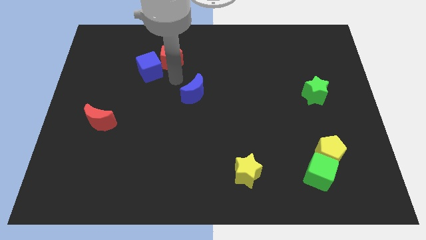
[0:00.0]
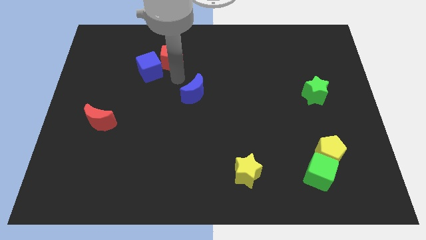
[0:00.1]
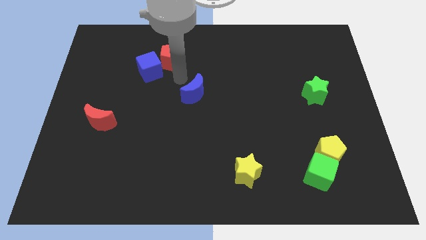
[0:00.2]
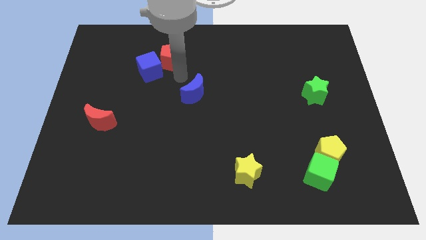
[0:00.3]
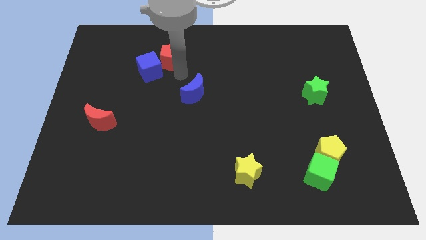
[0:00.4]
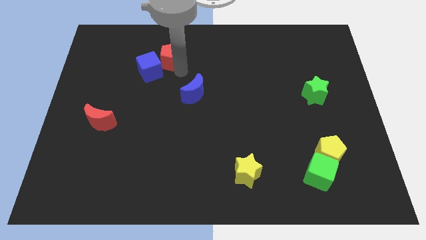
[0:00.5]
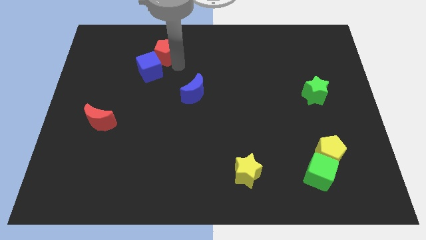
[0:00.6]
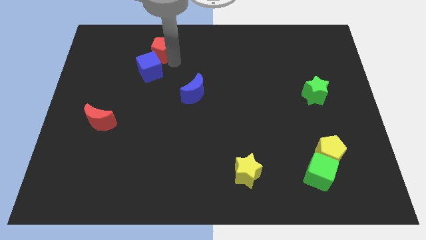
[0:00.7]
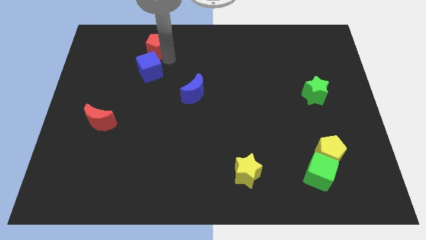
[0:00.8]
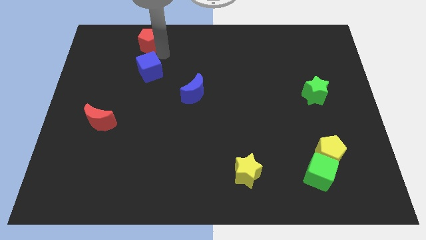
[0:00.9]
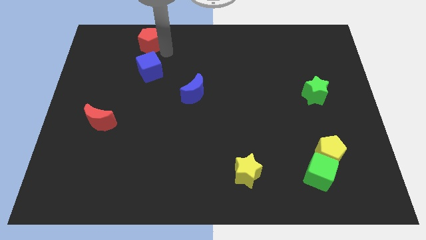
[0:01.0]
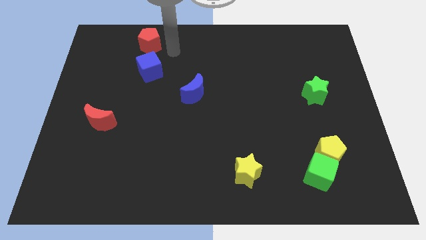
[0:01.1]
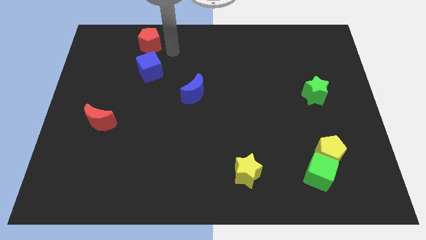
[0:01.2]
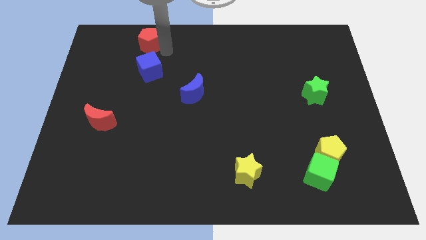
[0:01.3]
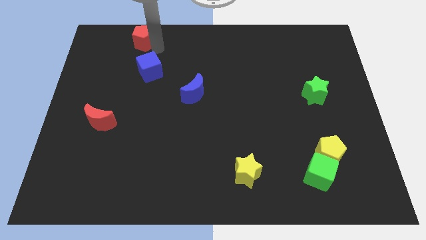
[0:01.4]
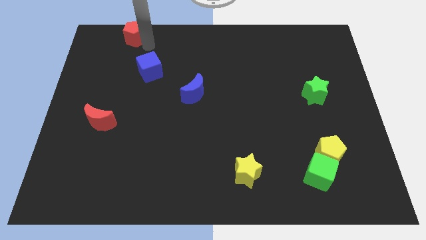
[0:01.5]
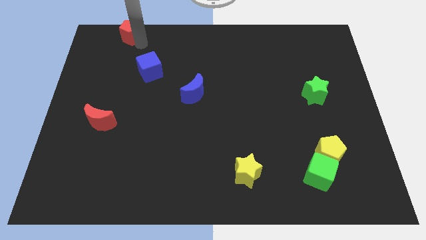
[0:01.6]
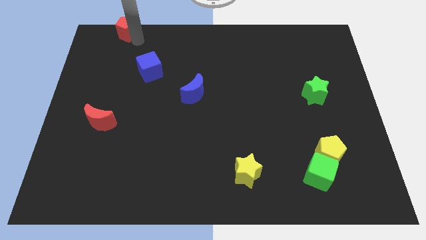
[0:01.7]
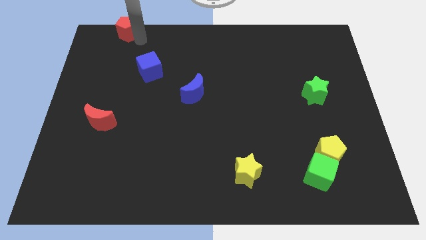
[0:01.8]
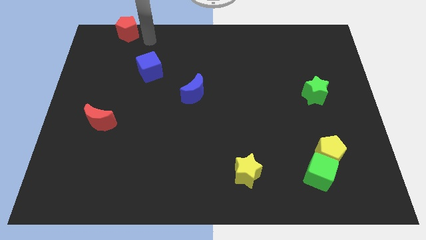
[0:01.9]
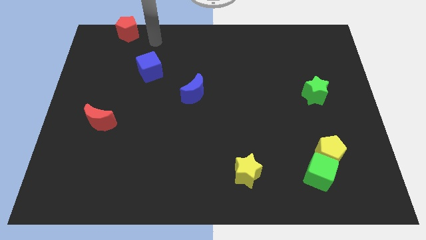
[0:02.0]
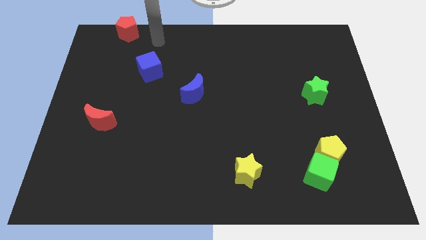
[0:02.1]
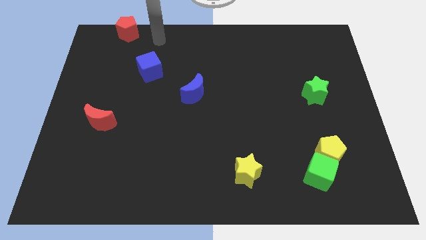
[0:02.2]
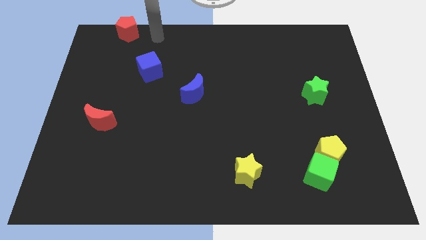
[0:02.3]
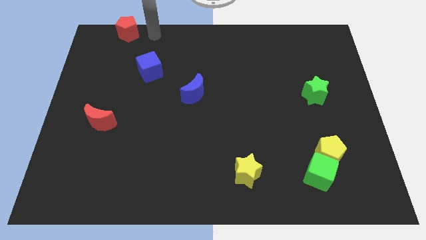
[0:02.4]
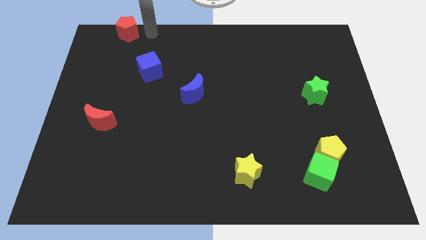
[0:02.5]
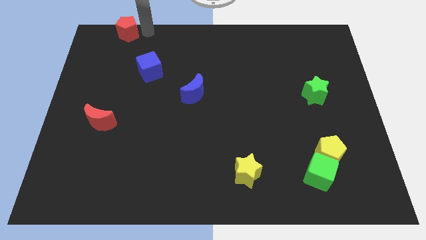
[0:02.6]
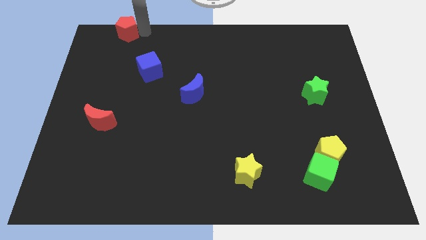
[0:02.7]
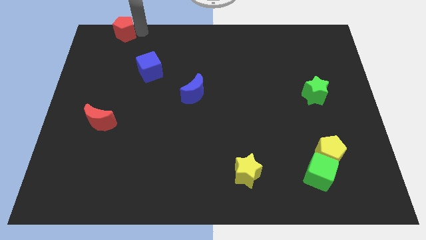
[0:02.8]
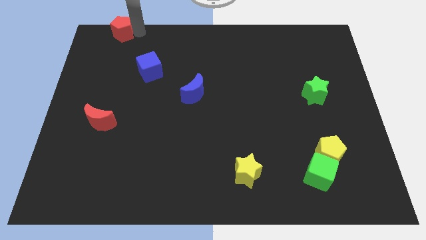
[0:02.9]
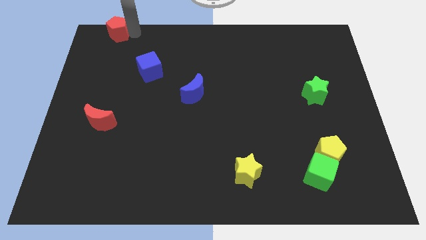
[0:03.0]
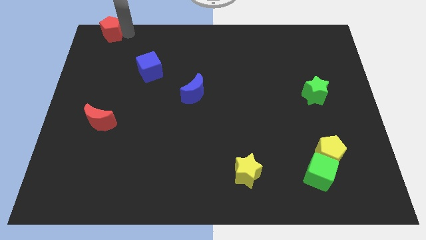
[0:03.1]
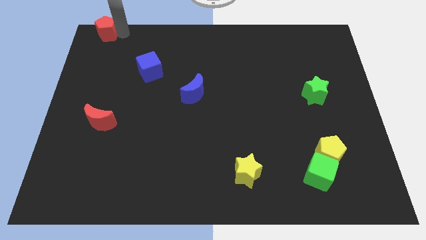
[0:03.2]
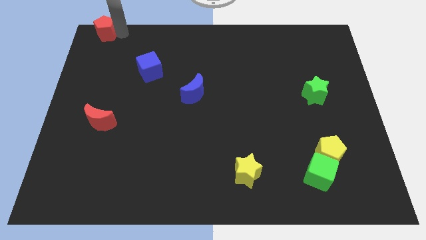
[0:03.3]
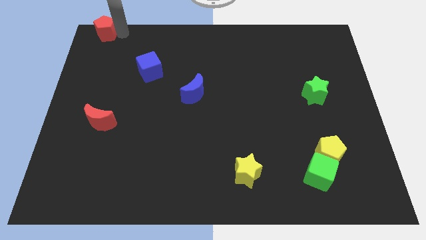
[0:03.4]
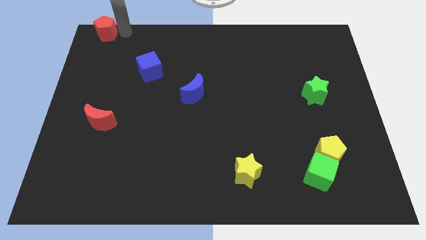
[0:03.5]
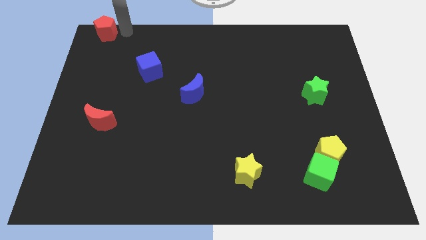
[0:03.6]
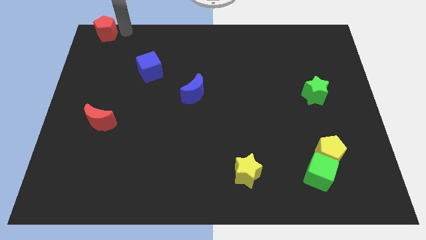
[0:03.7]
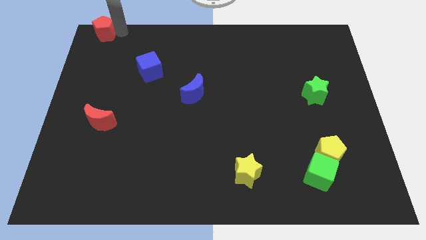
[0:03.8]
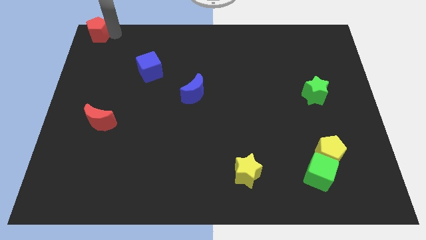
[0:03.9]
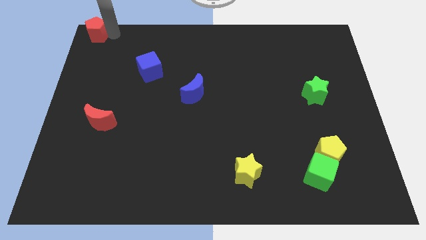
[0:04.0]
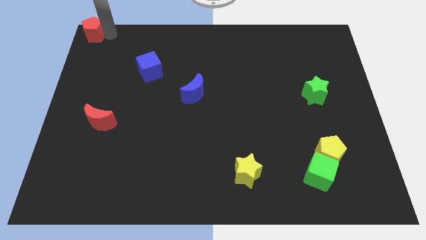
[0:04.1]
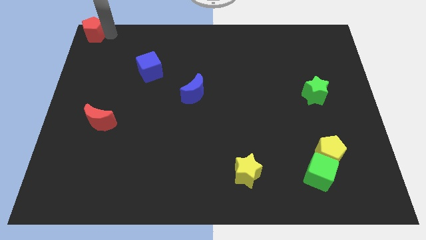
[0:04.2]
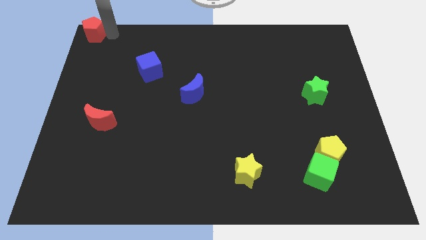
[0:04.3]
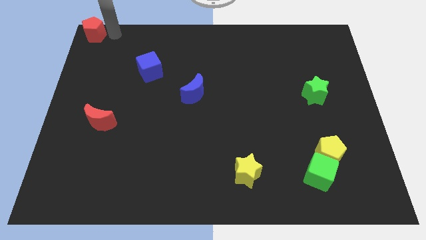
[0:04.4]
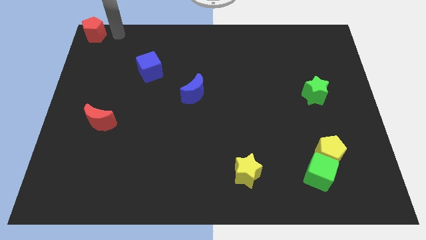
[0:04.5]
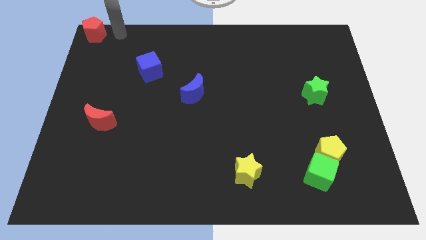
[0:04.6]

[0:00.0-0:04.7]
move the red pentagon to the top left corner

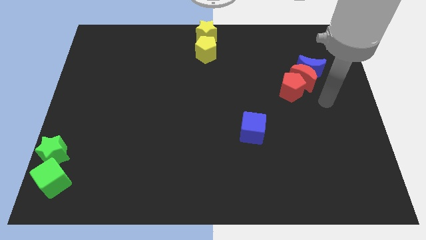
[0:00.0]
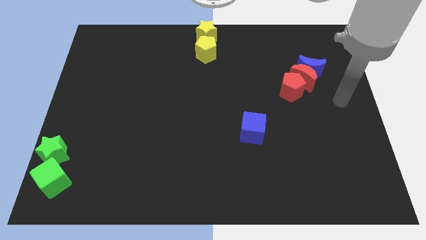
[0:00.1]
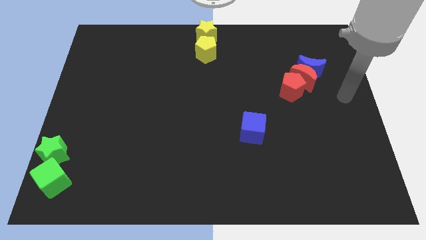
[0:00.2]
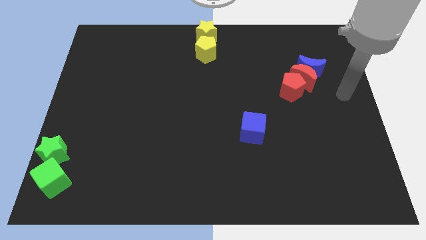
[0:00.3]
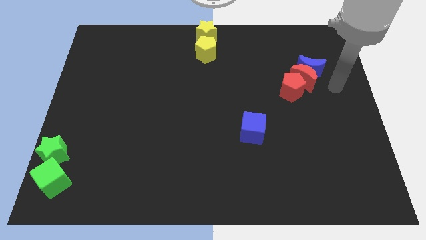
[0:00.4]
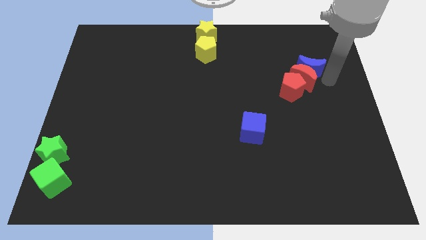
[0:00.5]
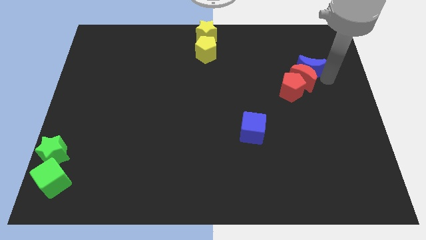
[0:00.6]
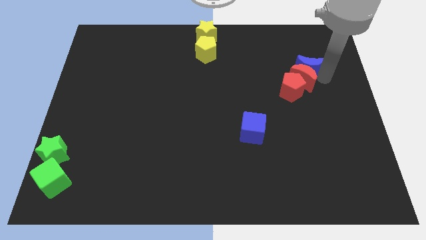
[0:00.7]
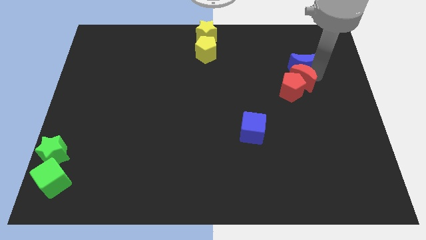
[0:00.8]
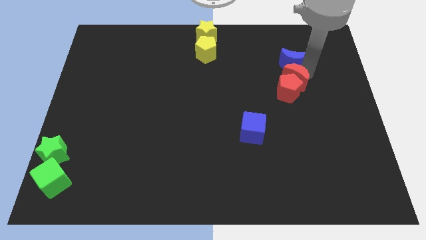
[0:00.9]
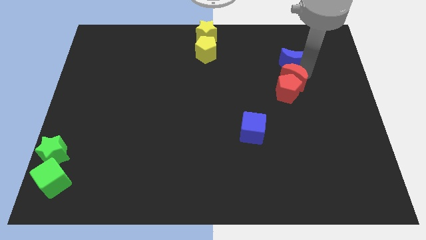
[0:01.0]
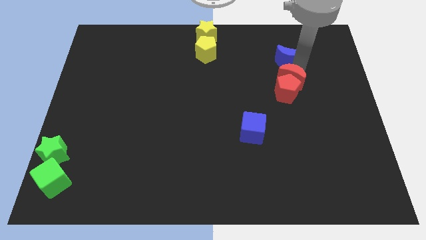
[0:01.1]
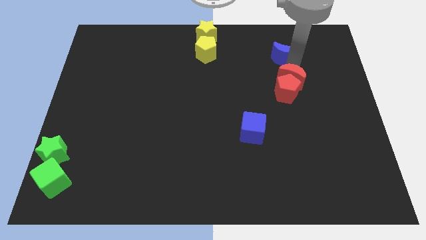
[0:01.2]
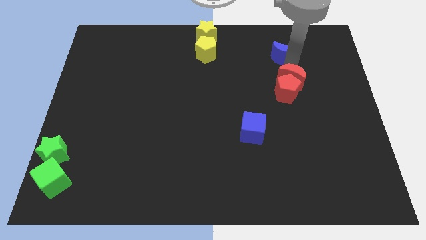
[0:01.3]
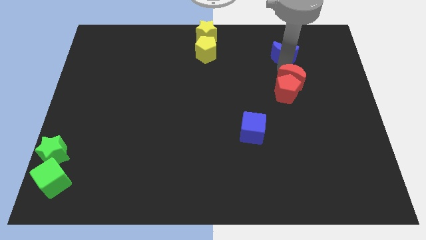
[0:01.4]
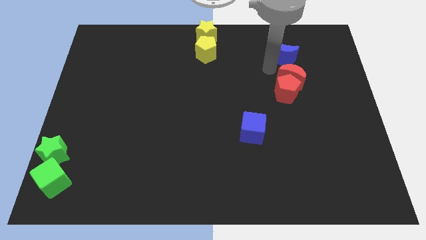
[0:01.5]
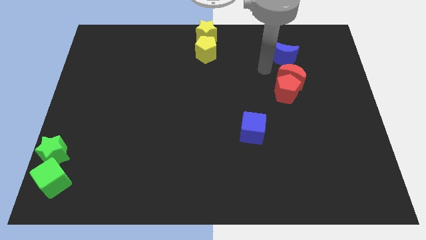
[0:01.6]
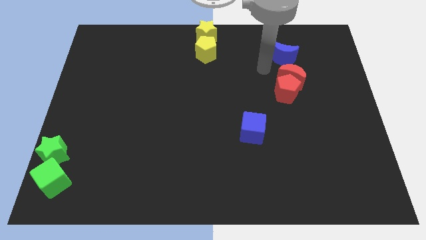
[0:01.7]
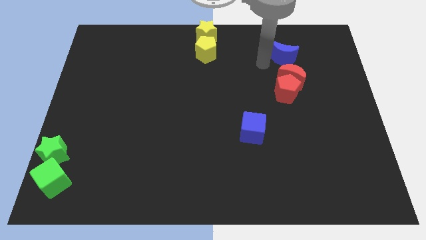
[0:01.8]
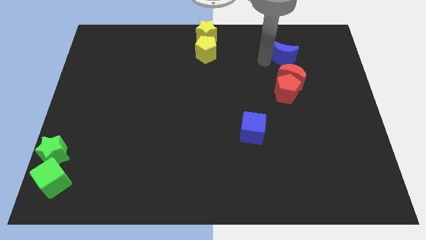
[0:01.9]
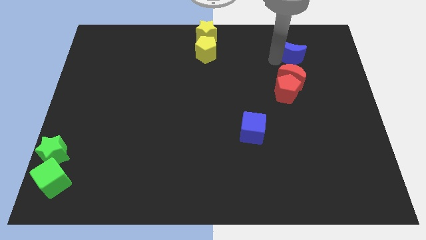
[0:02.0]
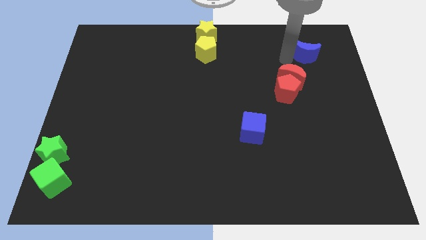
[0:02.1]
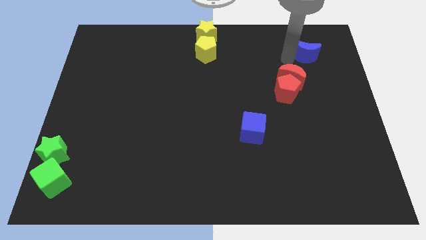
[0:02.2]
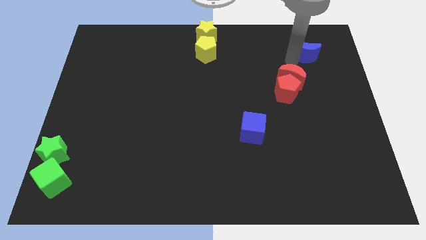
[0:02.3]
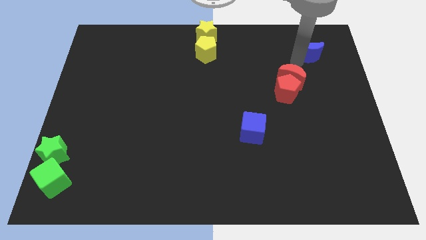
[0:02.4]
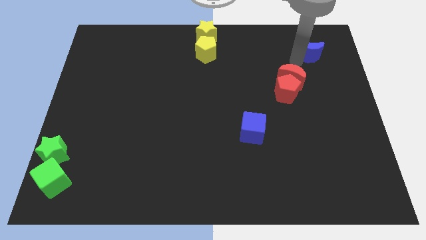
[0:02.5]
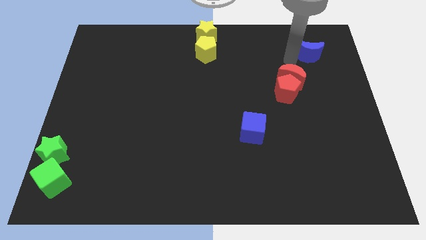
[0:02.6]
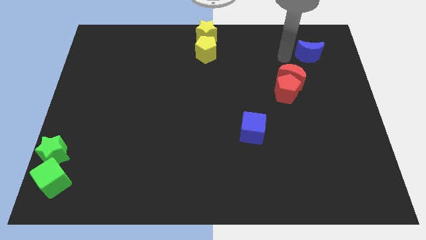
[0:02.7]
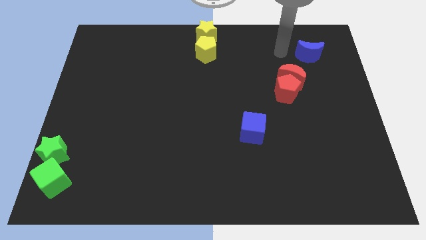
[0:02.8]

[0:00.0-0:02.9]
separate blue moon from red moon

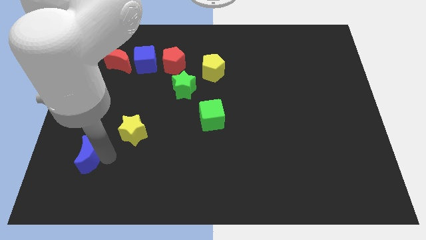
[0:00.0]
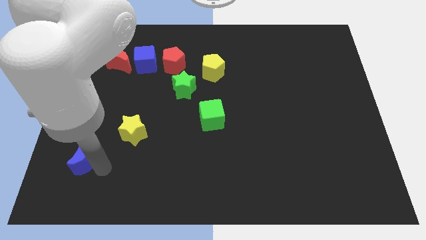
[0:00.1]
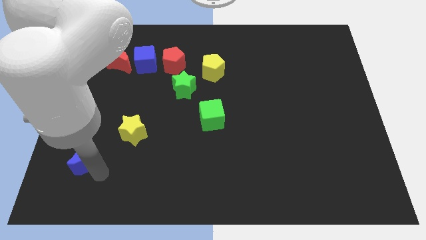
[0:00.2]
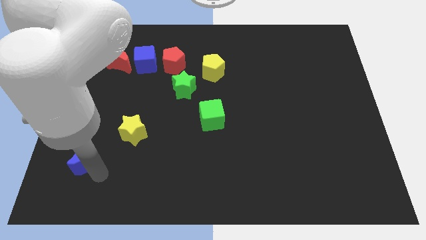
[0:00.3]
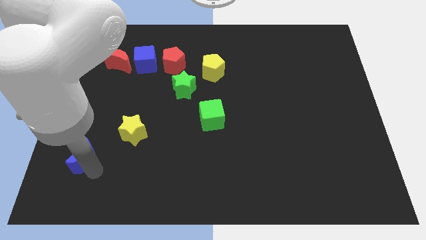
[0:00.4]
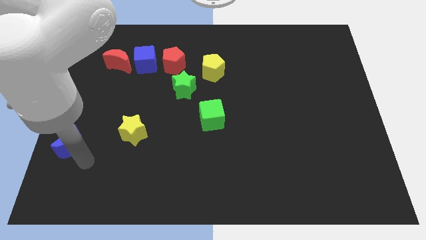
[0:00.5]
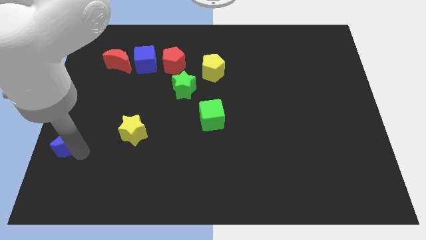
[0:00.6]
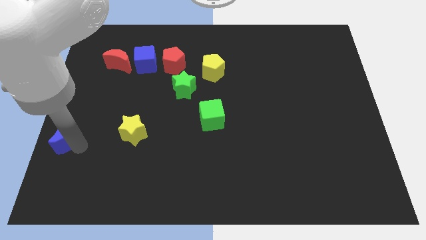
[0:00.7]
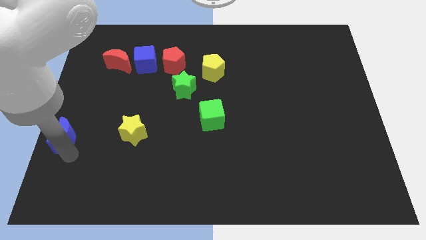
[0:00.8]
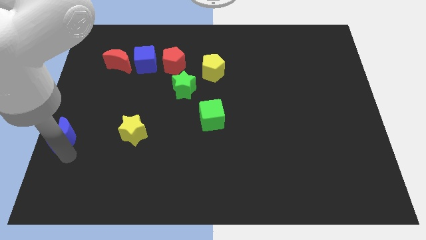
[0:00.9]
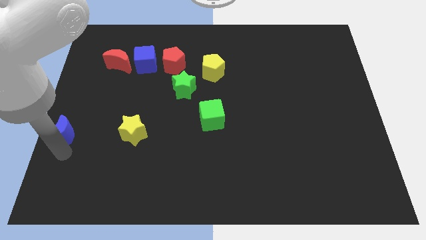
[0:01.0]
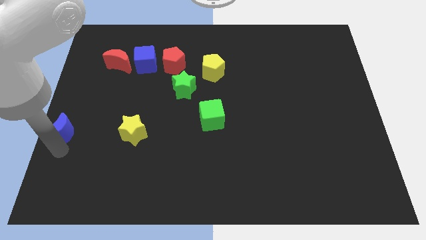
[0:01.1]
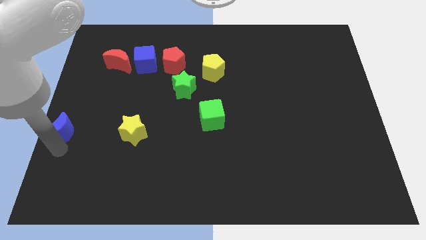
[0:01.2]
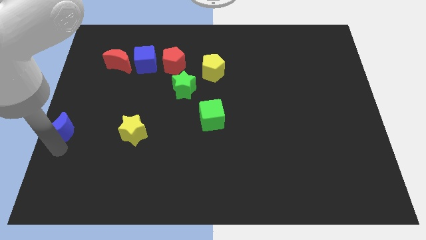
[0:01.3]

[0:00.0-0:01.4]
put the blue crescent parallel to the yellow star
